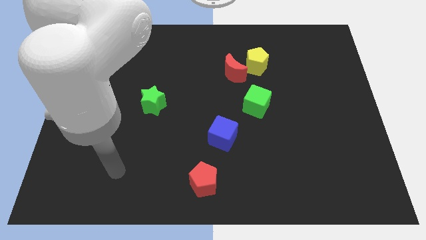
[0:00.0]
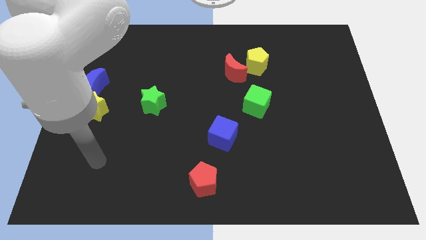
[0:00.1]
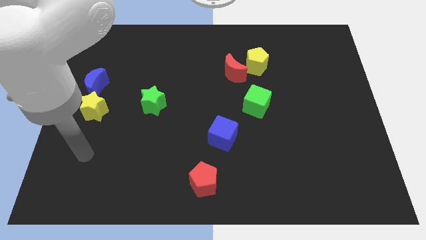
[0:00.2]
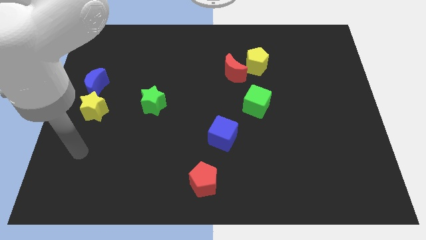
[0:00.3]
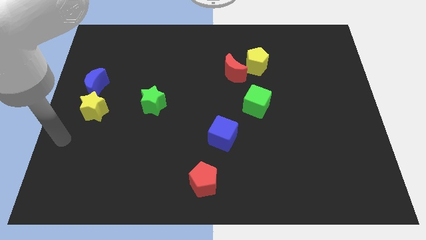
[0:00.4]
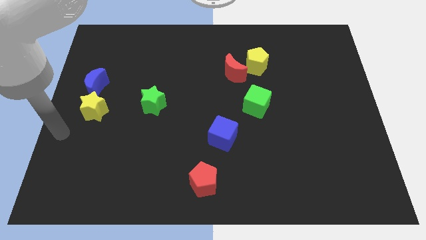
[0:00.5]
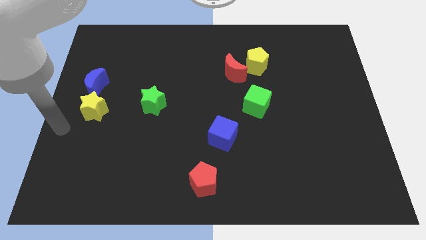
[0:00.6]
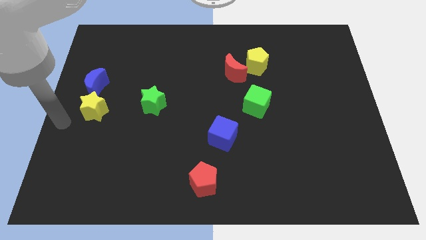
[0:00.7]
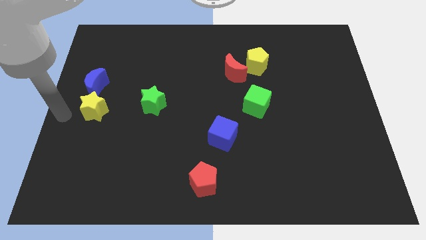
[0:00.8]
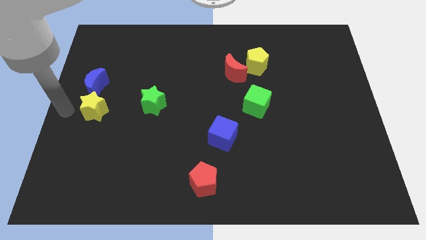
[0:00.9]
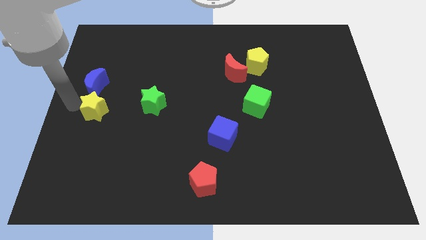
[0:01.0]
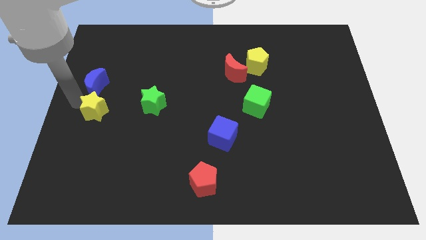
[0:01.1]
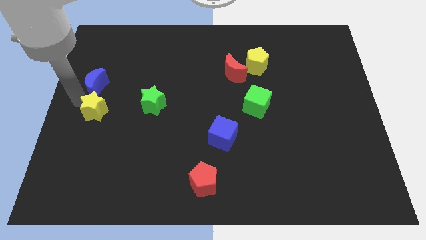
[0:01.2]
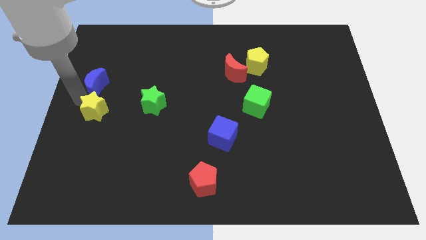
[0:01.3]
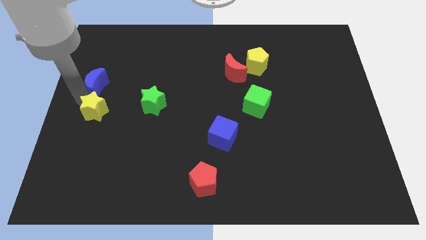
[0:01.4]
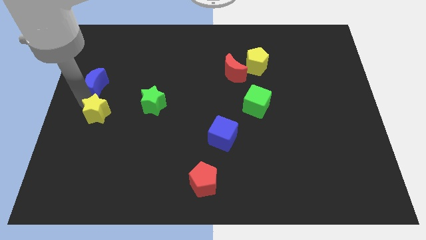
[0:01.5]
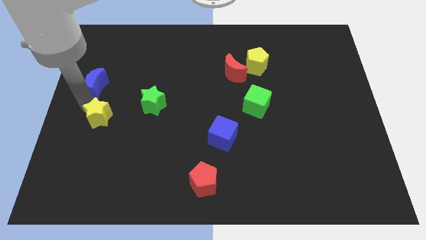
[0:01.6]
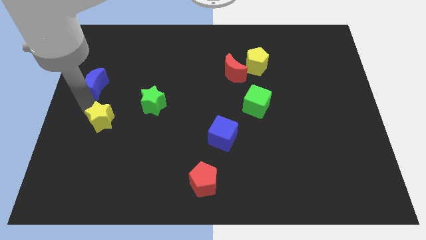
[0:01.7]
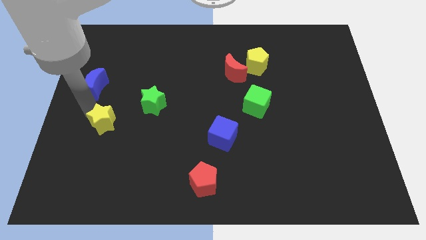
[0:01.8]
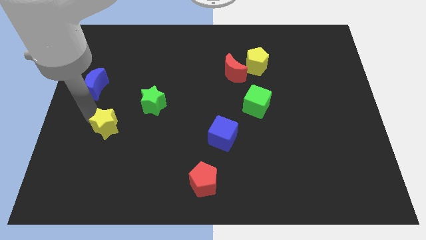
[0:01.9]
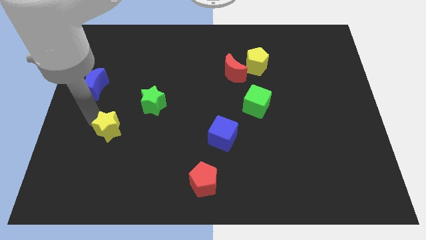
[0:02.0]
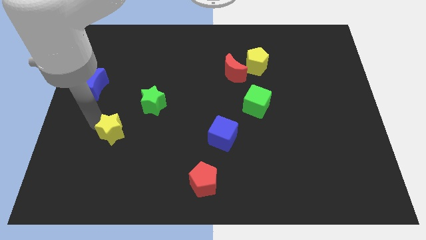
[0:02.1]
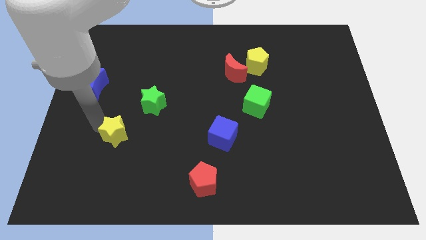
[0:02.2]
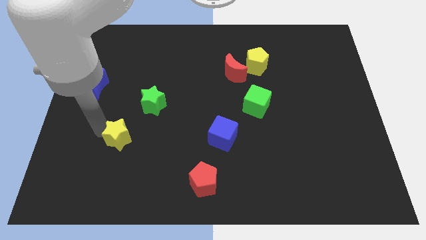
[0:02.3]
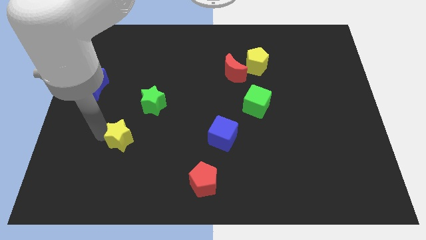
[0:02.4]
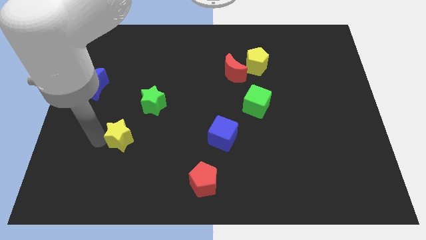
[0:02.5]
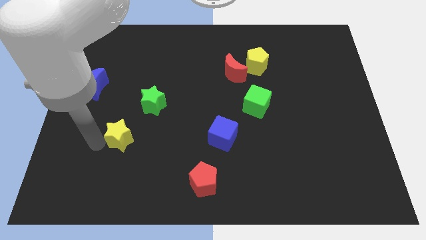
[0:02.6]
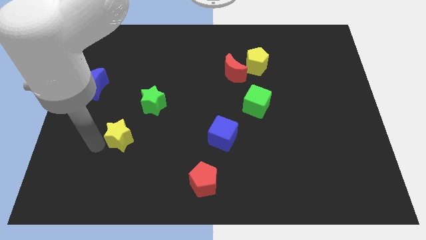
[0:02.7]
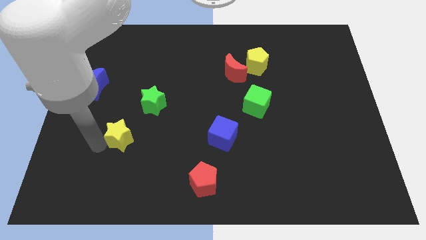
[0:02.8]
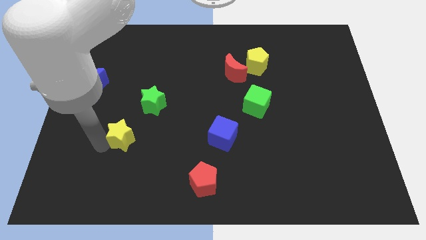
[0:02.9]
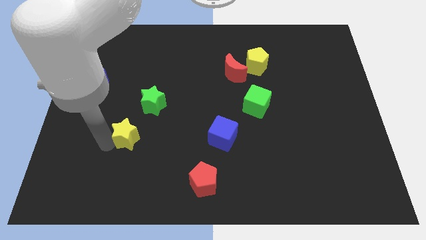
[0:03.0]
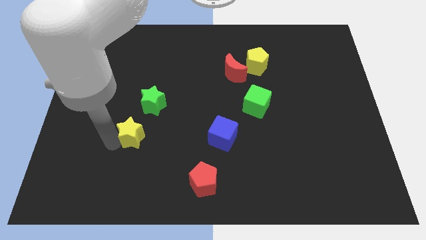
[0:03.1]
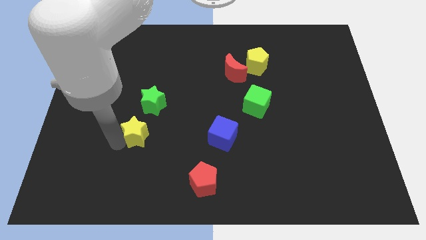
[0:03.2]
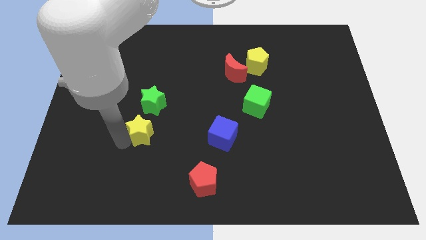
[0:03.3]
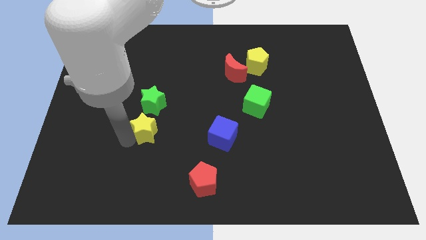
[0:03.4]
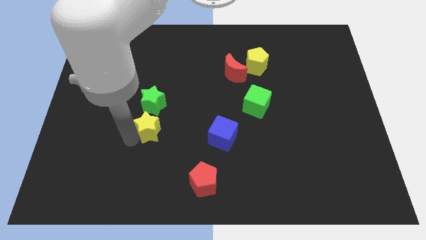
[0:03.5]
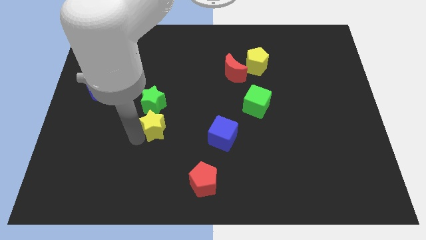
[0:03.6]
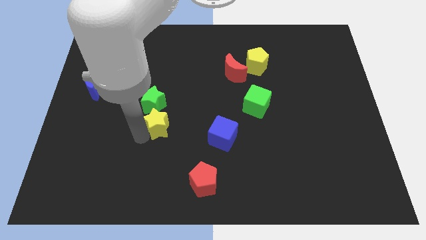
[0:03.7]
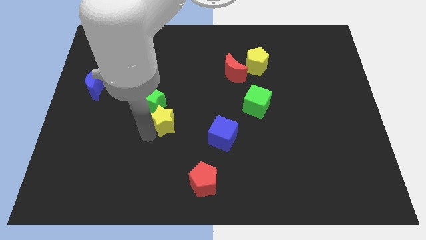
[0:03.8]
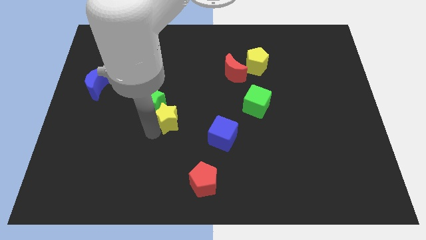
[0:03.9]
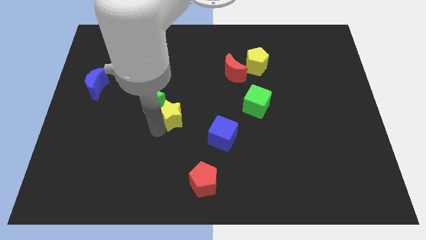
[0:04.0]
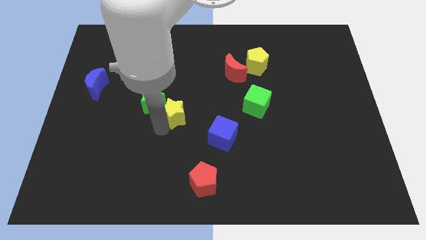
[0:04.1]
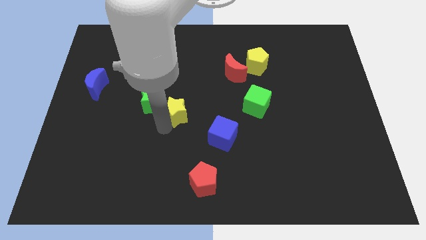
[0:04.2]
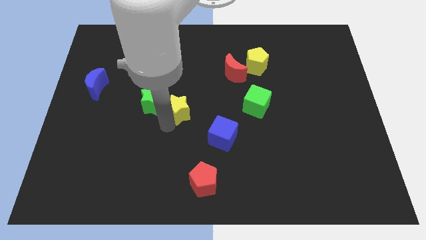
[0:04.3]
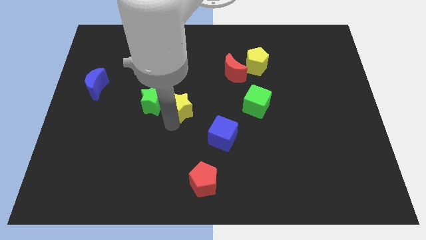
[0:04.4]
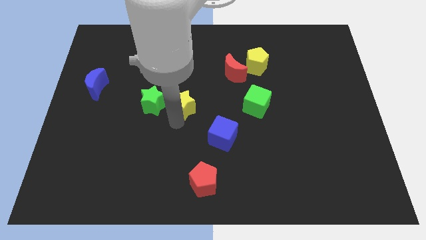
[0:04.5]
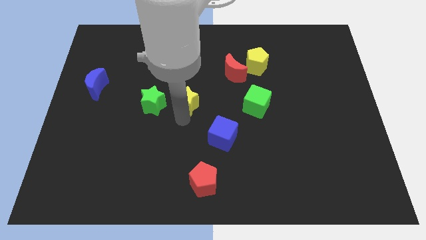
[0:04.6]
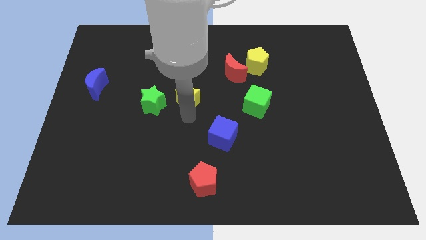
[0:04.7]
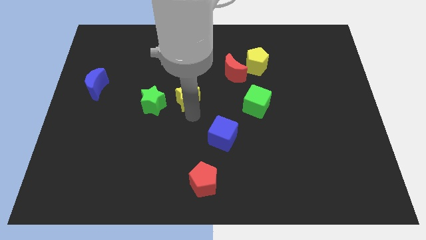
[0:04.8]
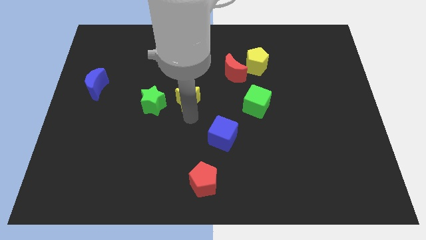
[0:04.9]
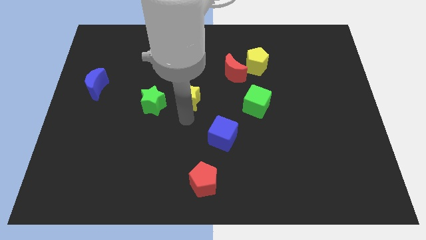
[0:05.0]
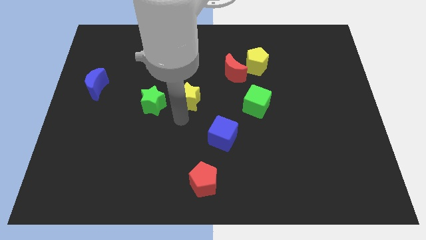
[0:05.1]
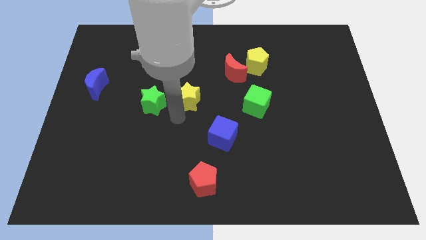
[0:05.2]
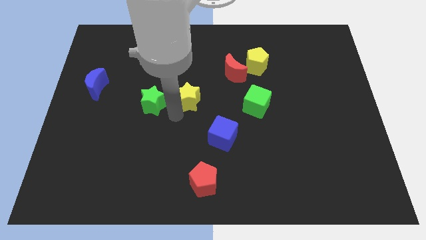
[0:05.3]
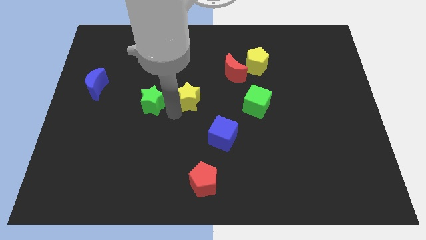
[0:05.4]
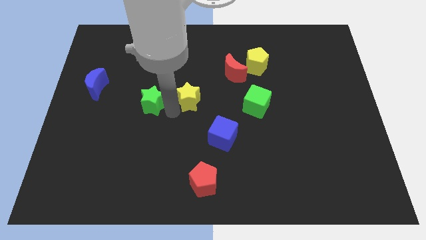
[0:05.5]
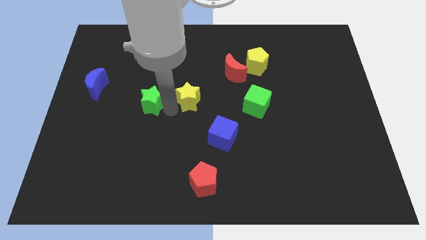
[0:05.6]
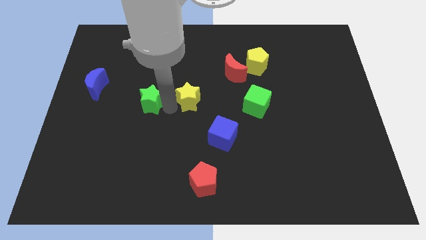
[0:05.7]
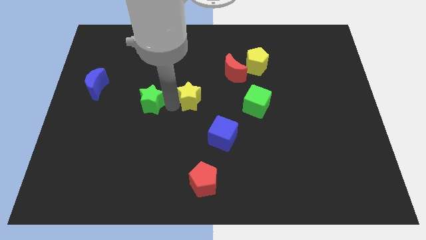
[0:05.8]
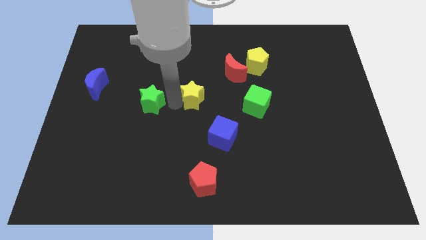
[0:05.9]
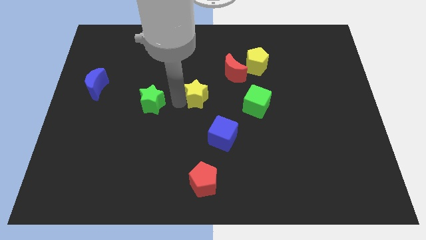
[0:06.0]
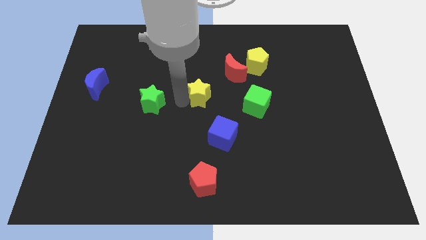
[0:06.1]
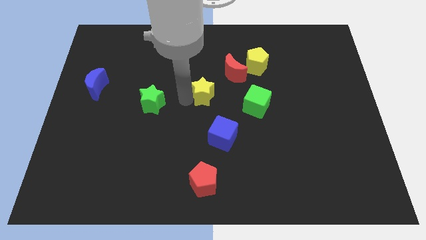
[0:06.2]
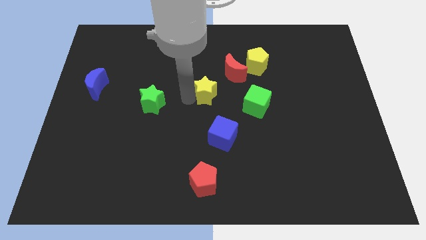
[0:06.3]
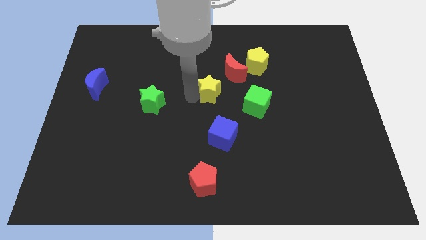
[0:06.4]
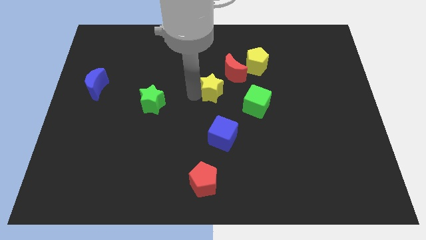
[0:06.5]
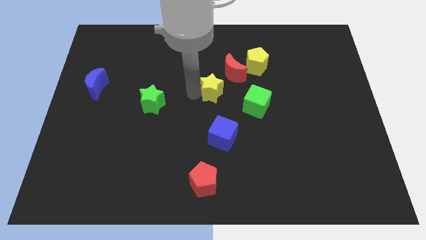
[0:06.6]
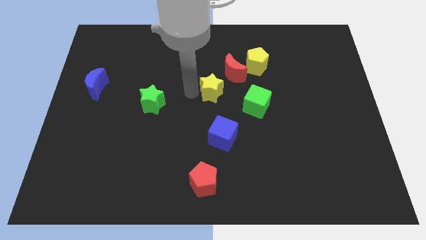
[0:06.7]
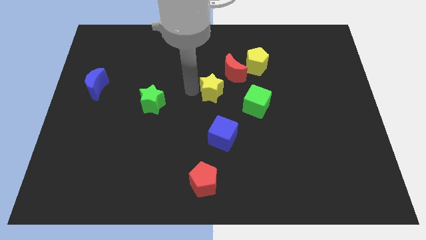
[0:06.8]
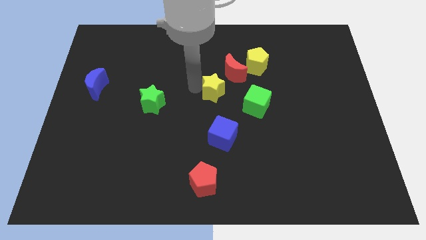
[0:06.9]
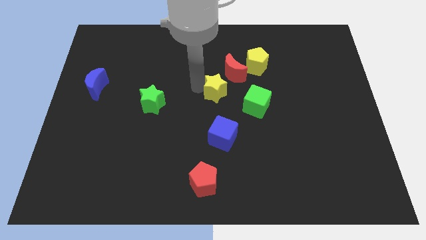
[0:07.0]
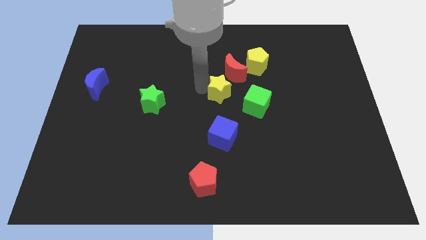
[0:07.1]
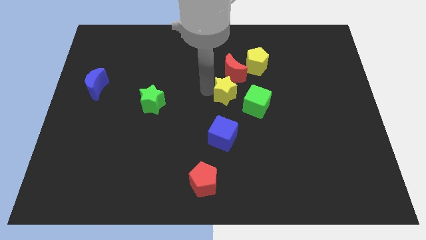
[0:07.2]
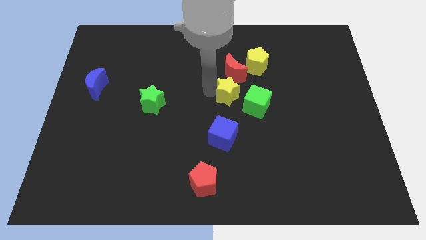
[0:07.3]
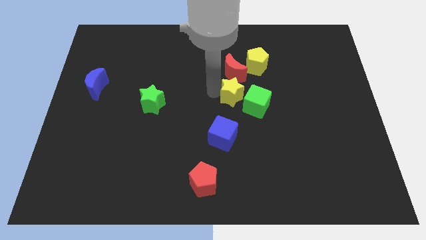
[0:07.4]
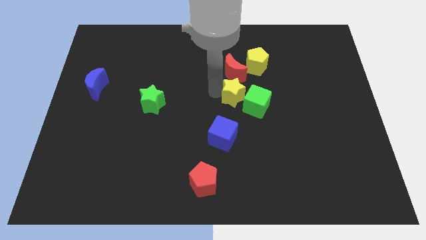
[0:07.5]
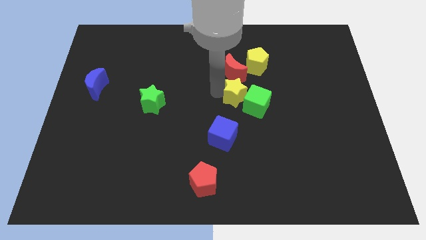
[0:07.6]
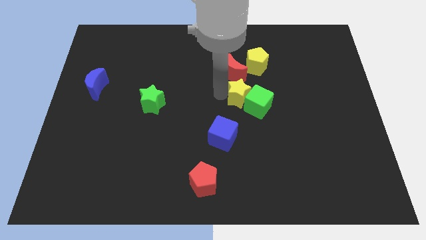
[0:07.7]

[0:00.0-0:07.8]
slide the yellow star towards the green cube

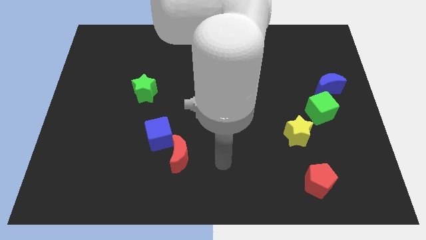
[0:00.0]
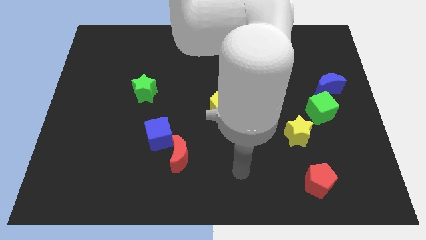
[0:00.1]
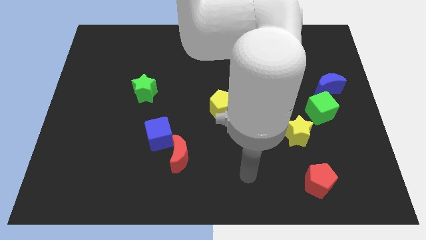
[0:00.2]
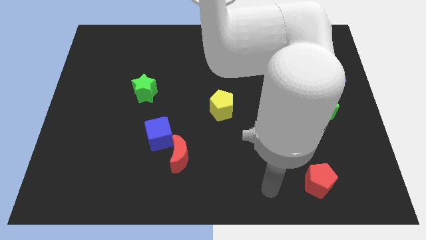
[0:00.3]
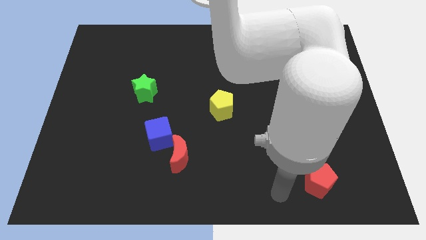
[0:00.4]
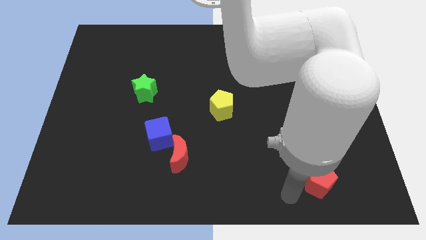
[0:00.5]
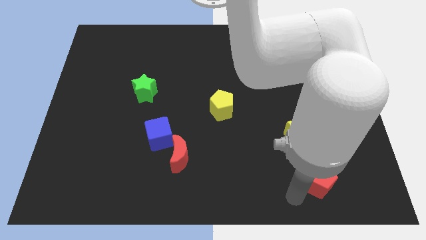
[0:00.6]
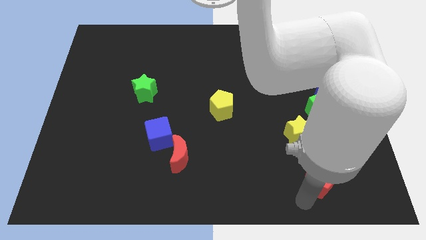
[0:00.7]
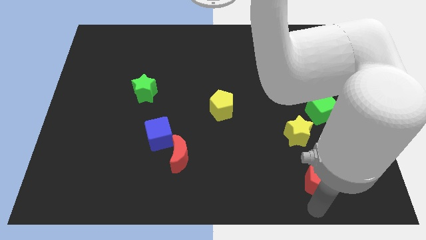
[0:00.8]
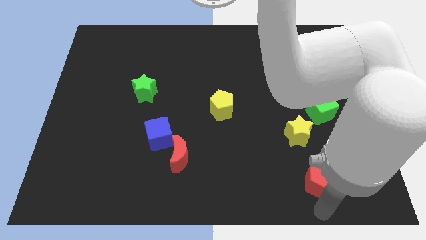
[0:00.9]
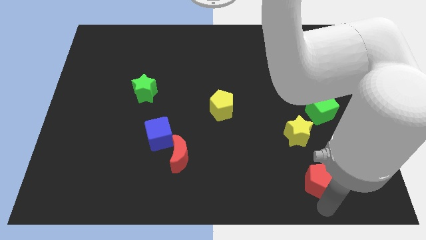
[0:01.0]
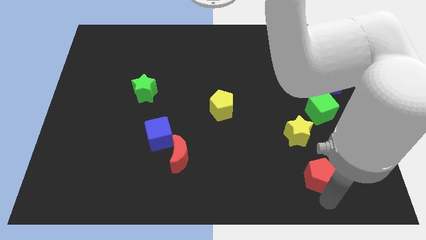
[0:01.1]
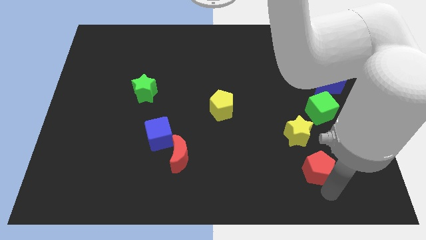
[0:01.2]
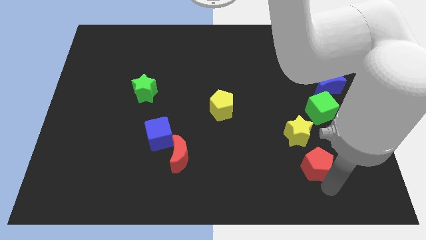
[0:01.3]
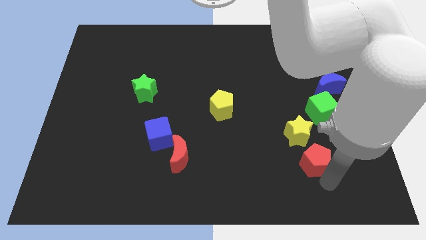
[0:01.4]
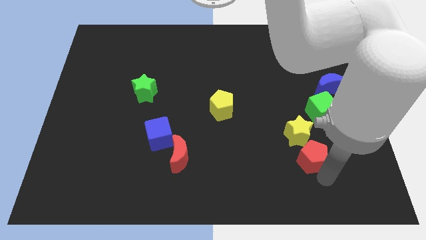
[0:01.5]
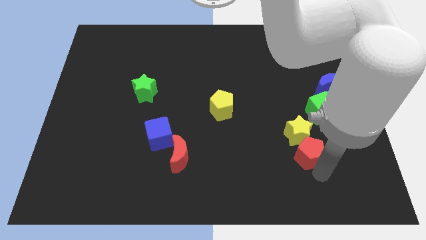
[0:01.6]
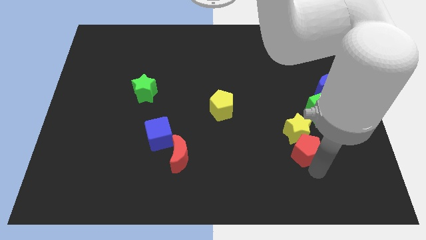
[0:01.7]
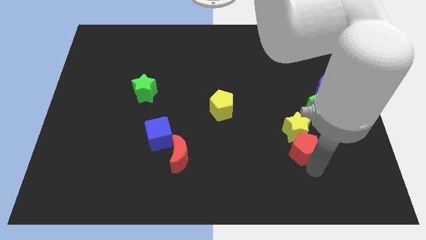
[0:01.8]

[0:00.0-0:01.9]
put the red pentagon to the yellow star
